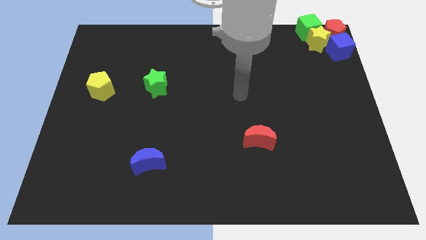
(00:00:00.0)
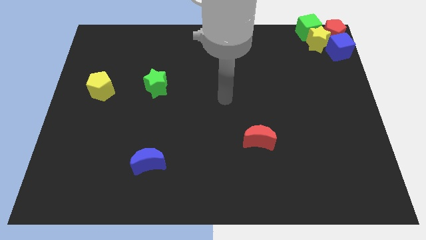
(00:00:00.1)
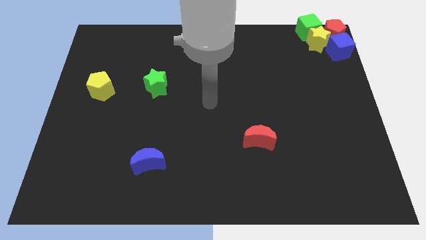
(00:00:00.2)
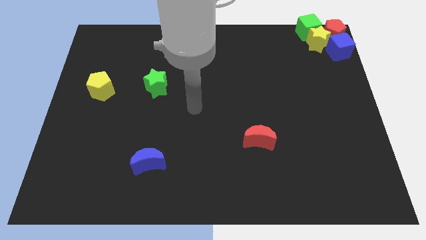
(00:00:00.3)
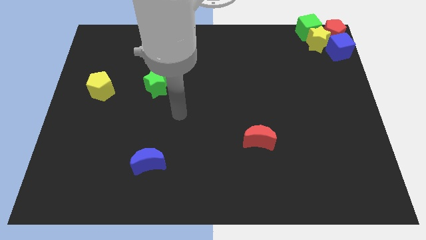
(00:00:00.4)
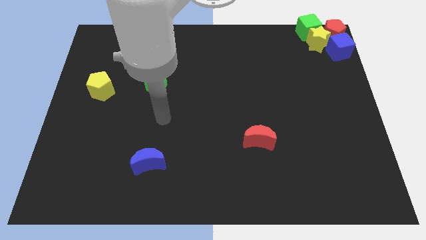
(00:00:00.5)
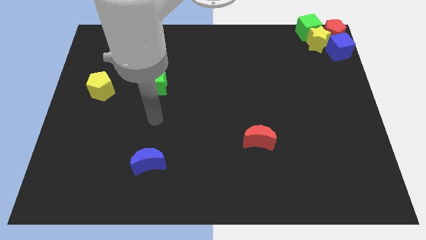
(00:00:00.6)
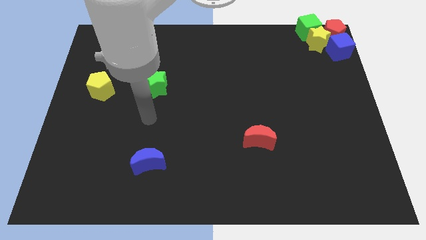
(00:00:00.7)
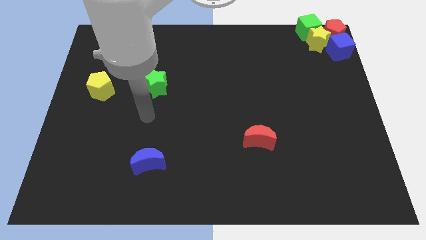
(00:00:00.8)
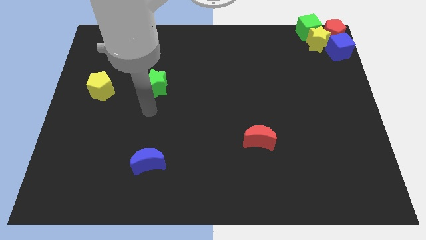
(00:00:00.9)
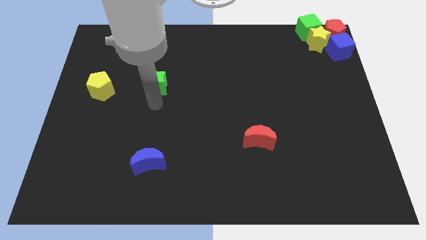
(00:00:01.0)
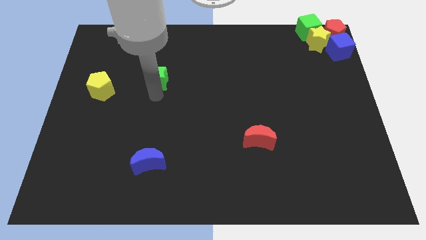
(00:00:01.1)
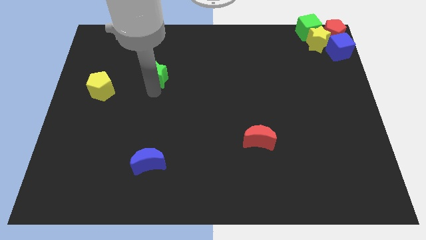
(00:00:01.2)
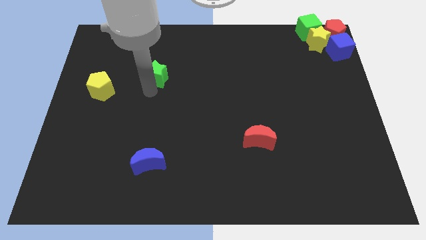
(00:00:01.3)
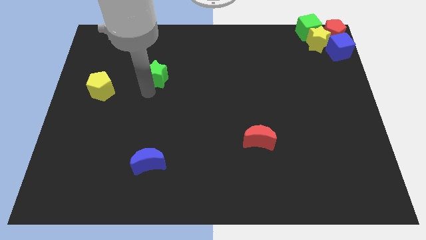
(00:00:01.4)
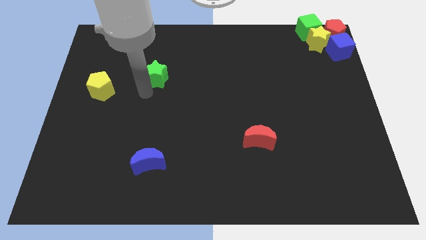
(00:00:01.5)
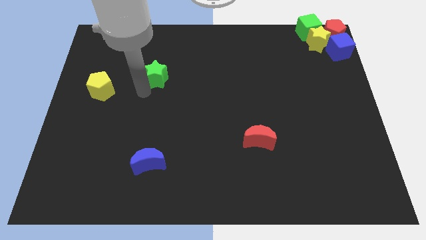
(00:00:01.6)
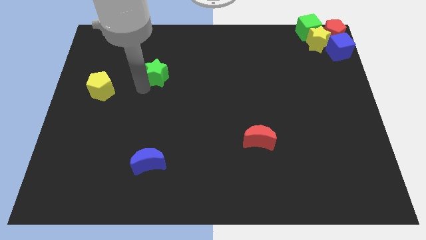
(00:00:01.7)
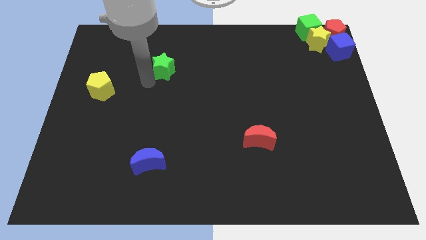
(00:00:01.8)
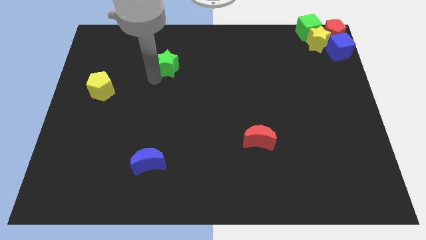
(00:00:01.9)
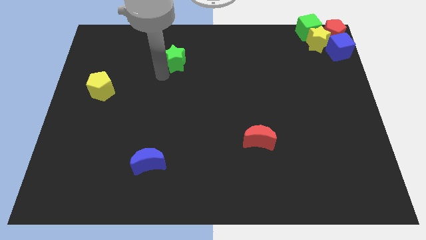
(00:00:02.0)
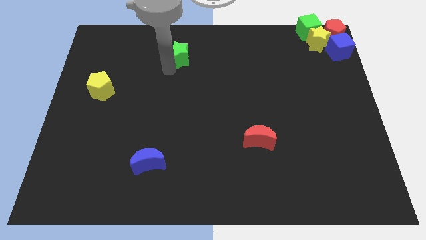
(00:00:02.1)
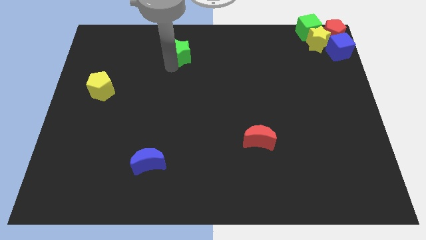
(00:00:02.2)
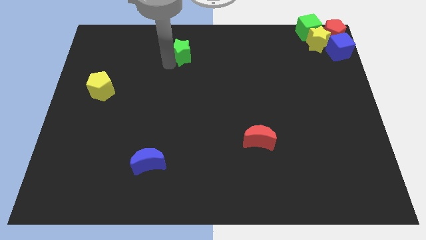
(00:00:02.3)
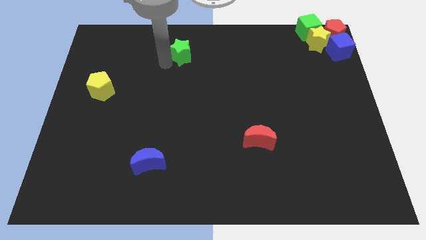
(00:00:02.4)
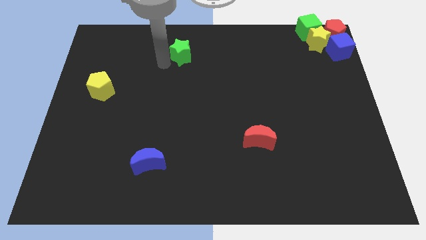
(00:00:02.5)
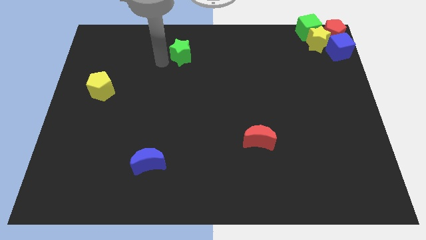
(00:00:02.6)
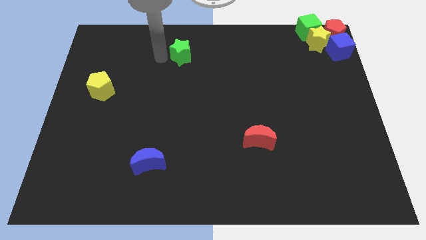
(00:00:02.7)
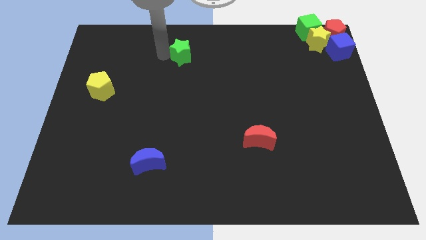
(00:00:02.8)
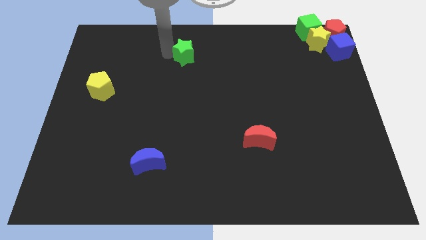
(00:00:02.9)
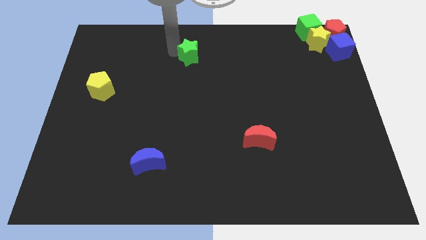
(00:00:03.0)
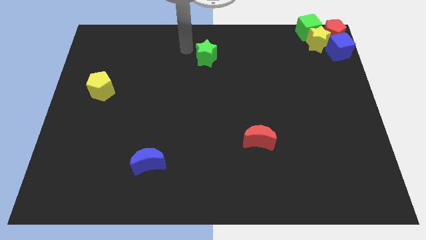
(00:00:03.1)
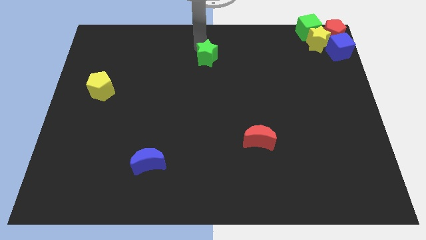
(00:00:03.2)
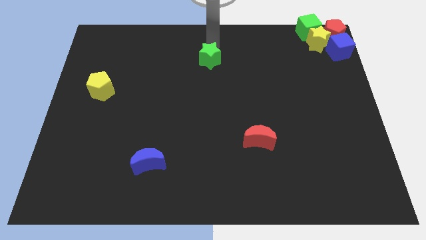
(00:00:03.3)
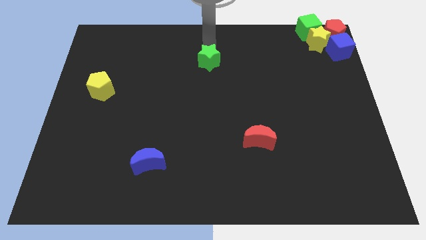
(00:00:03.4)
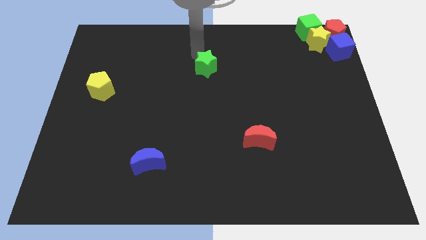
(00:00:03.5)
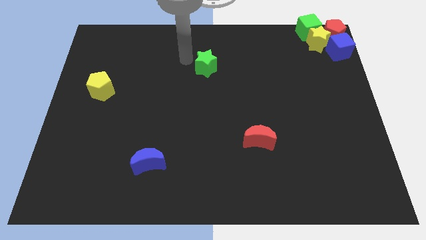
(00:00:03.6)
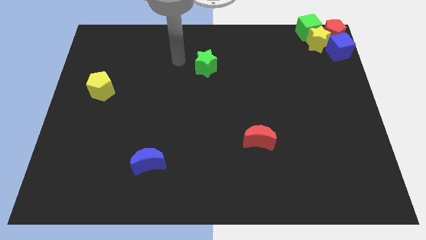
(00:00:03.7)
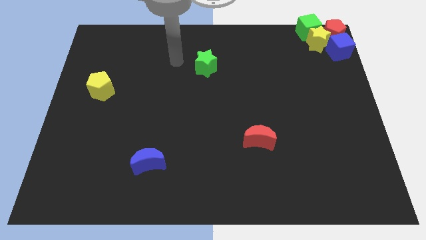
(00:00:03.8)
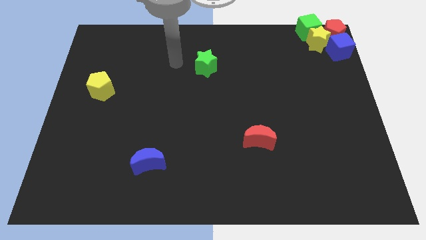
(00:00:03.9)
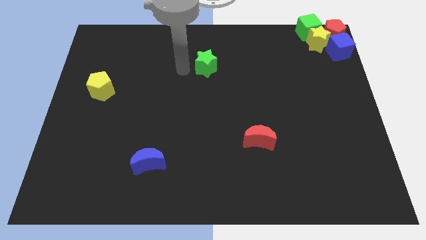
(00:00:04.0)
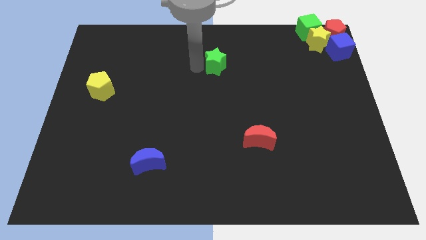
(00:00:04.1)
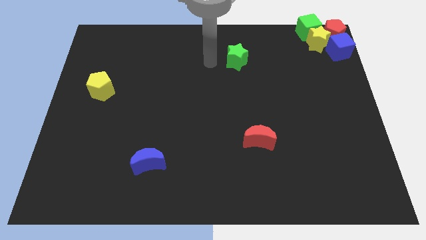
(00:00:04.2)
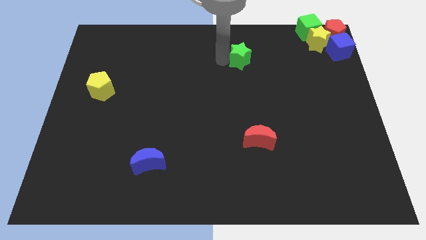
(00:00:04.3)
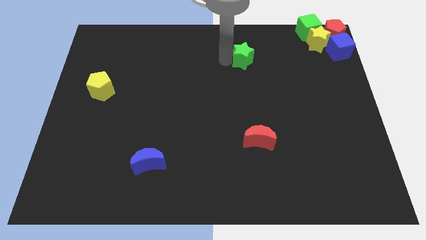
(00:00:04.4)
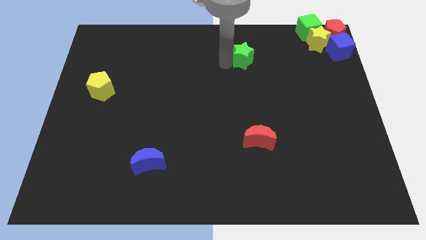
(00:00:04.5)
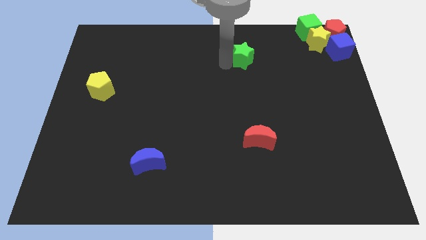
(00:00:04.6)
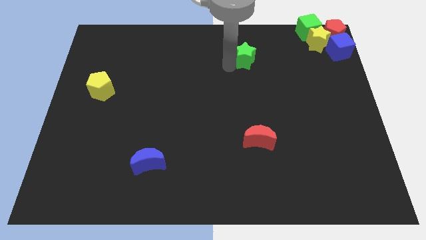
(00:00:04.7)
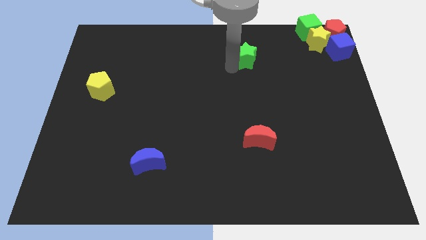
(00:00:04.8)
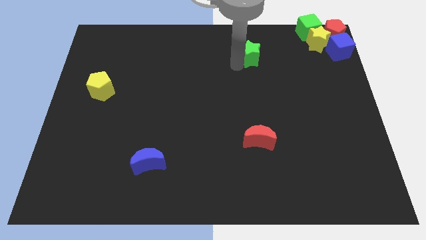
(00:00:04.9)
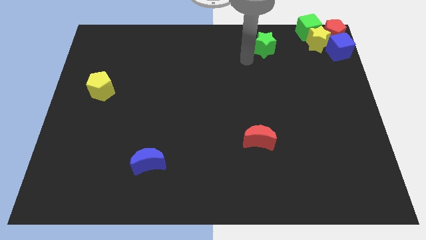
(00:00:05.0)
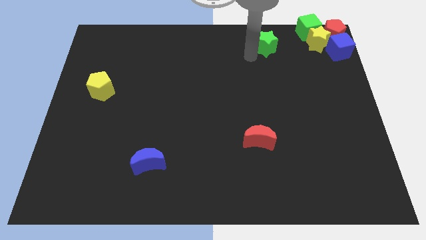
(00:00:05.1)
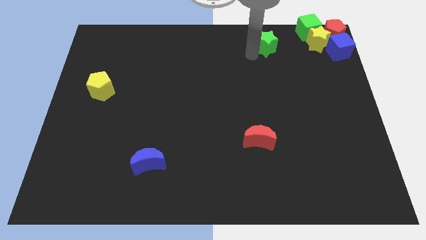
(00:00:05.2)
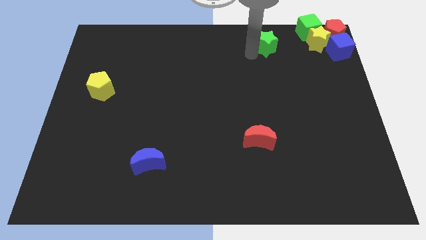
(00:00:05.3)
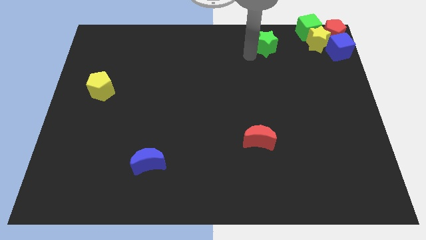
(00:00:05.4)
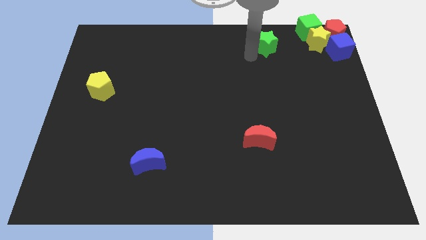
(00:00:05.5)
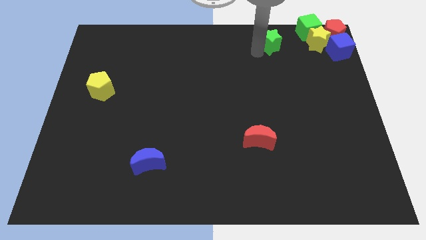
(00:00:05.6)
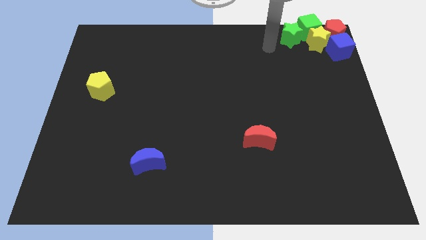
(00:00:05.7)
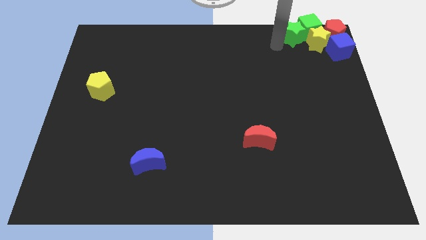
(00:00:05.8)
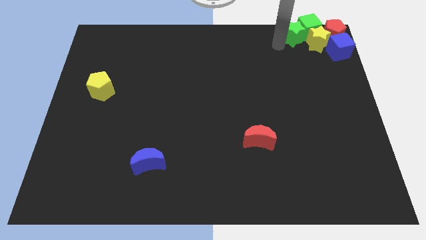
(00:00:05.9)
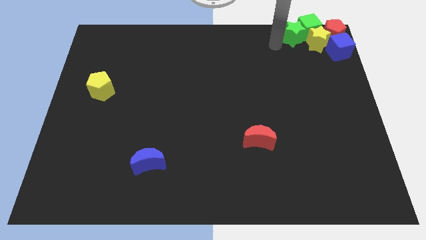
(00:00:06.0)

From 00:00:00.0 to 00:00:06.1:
push the green star into the green cube

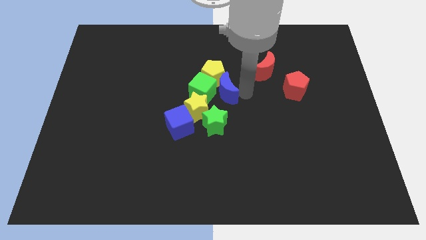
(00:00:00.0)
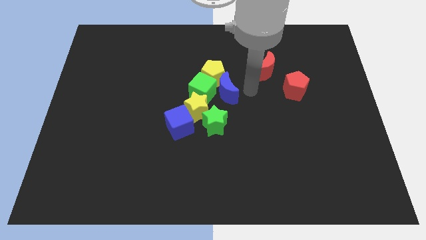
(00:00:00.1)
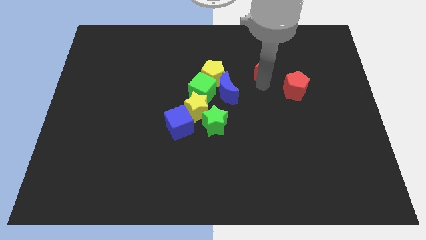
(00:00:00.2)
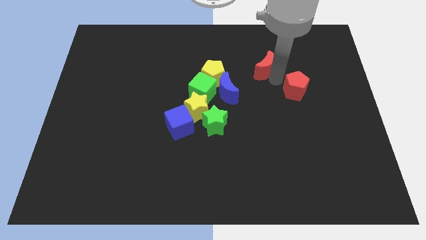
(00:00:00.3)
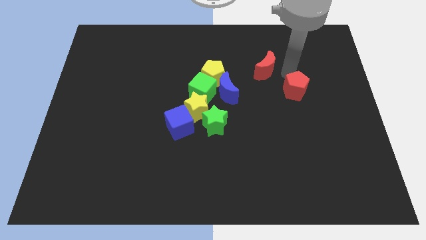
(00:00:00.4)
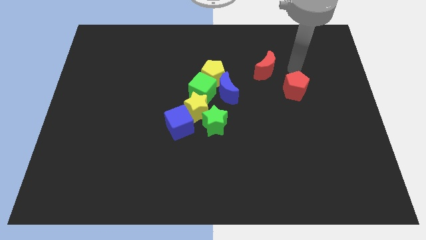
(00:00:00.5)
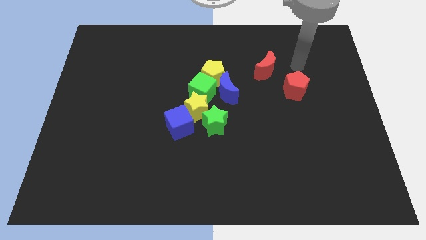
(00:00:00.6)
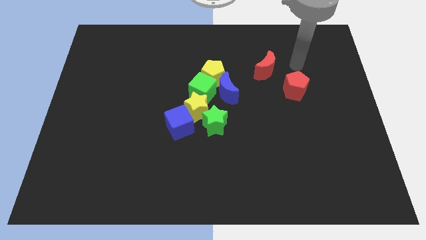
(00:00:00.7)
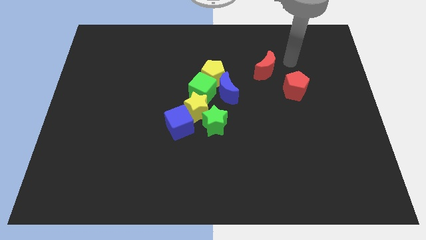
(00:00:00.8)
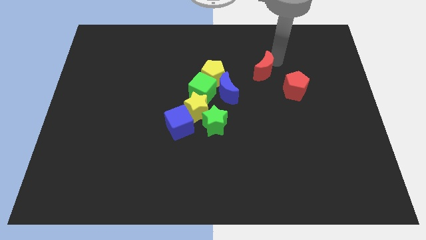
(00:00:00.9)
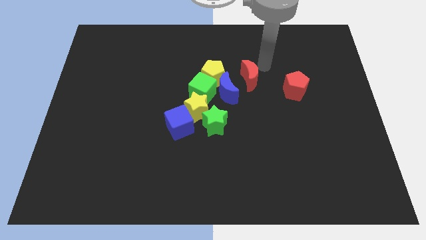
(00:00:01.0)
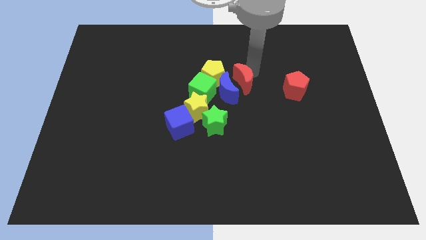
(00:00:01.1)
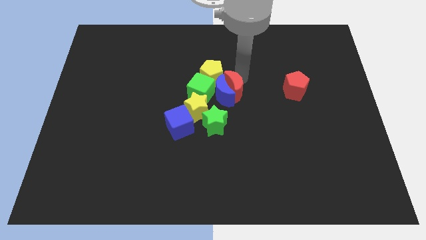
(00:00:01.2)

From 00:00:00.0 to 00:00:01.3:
push the red moon towards the blue moon

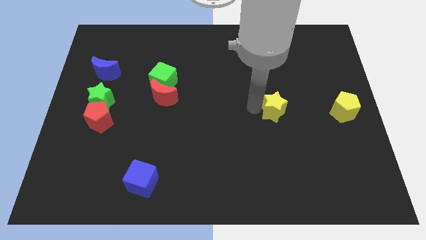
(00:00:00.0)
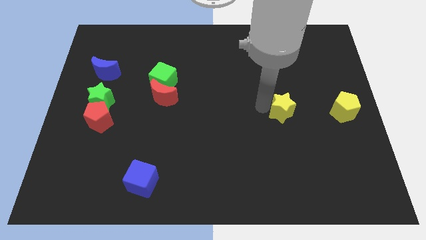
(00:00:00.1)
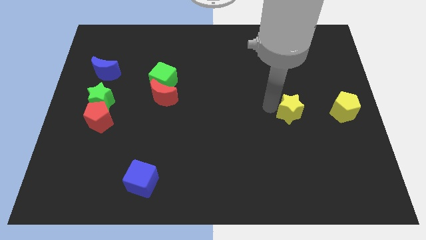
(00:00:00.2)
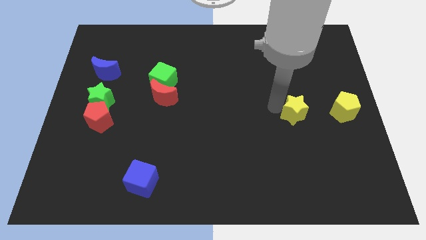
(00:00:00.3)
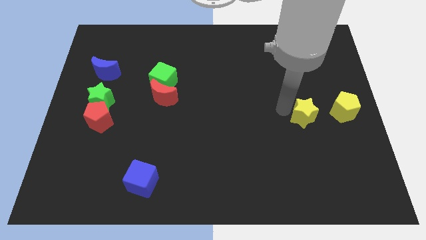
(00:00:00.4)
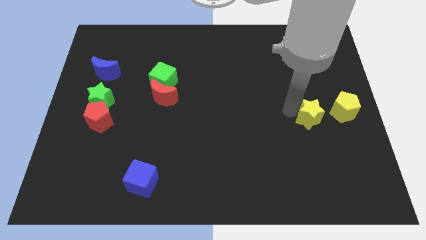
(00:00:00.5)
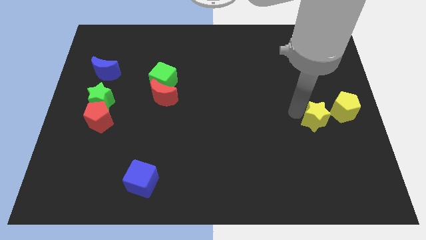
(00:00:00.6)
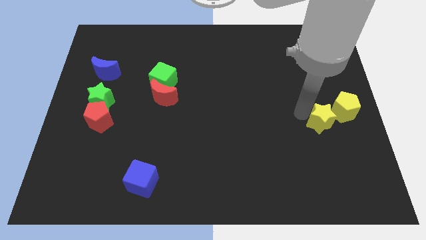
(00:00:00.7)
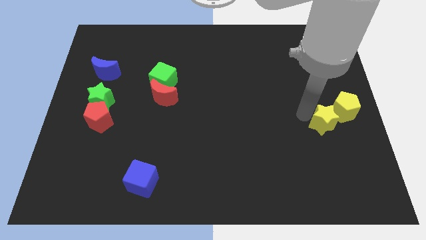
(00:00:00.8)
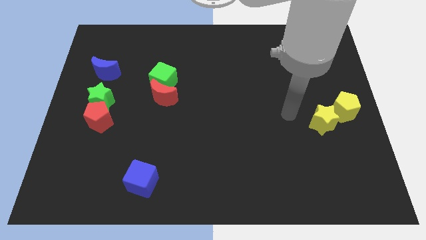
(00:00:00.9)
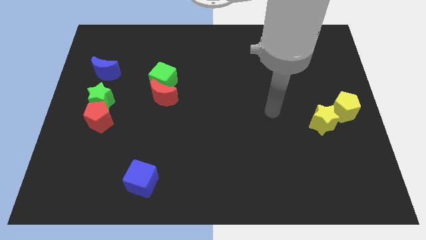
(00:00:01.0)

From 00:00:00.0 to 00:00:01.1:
move the yellow star close to the yellow pentagon

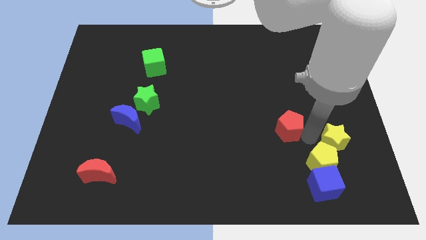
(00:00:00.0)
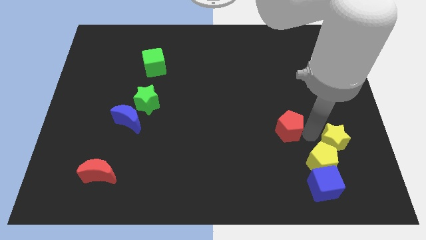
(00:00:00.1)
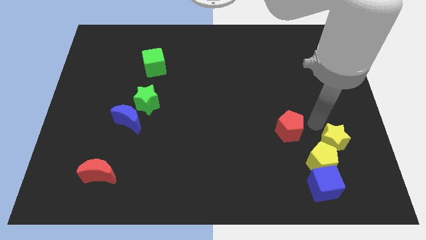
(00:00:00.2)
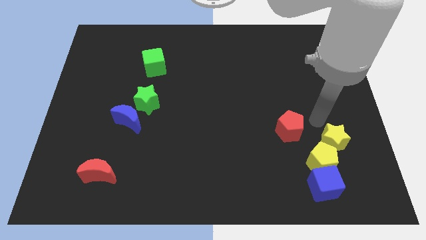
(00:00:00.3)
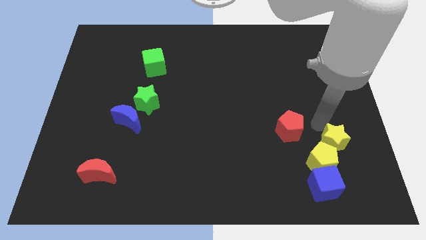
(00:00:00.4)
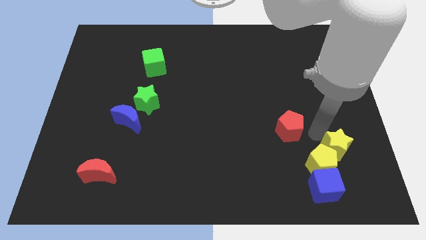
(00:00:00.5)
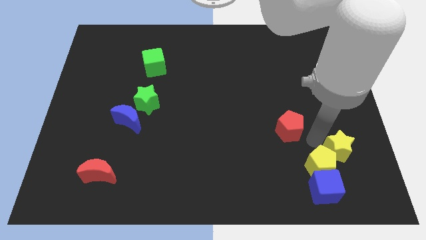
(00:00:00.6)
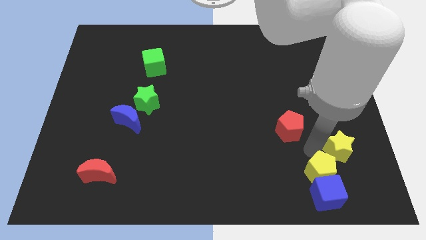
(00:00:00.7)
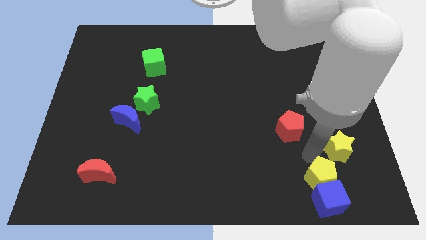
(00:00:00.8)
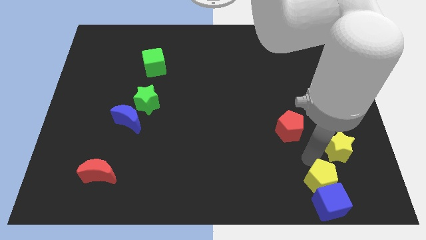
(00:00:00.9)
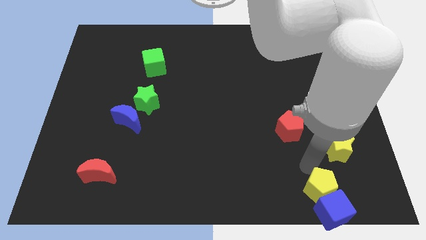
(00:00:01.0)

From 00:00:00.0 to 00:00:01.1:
slide the yellow pentagon and blue cube slightly to the bottom side of the board
